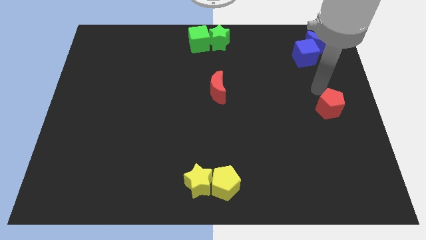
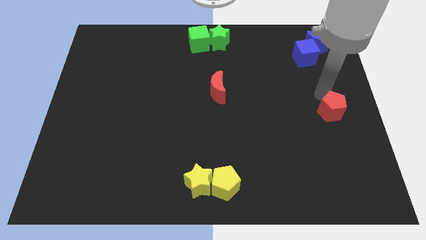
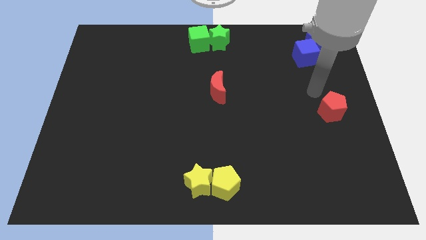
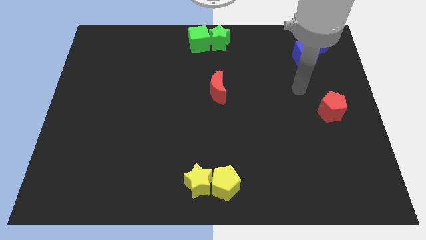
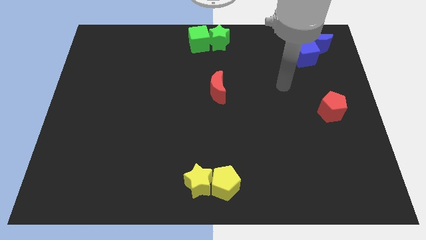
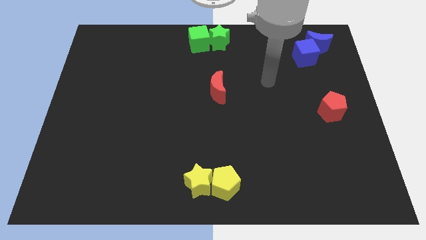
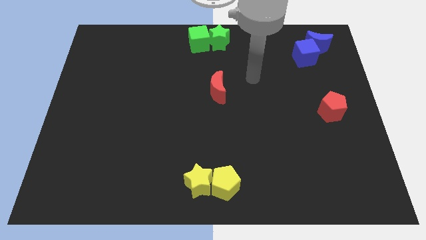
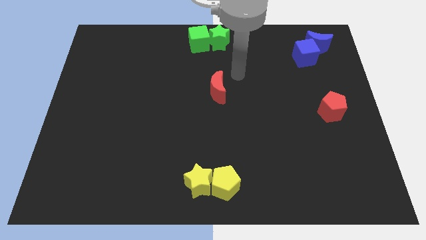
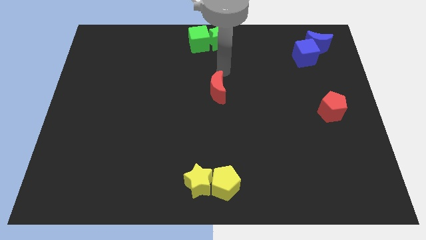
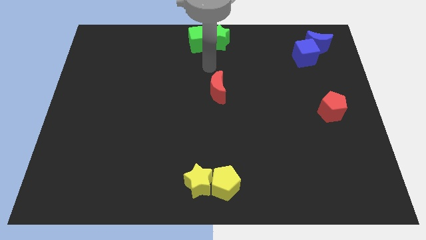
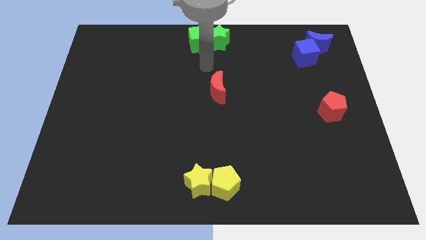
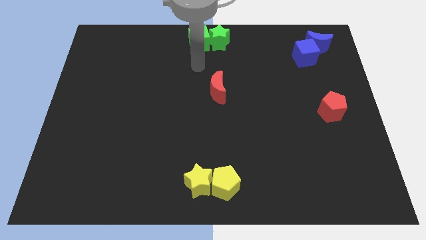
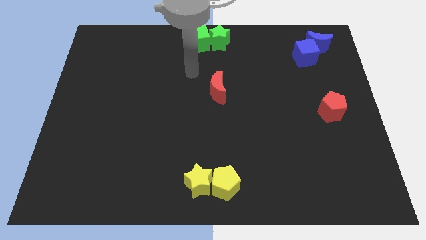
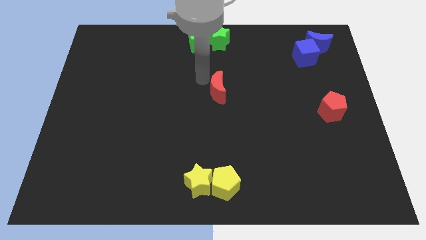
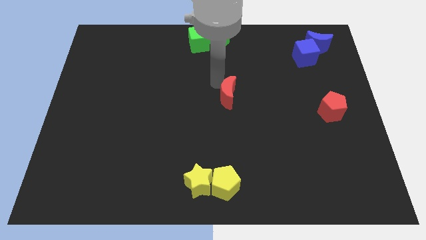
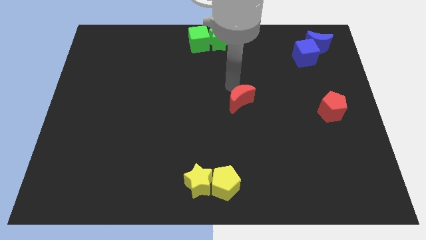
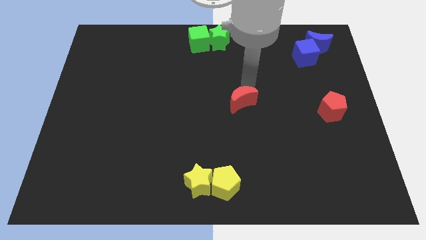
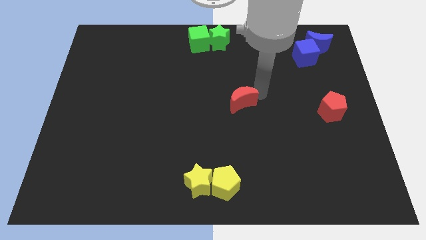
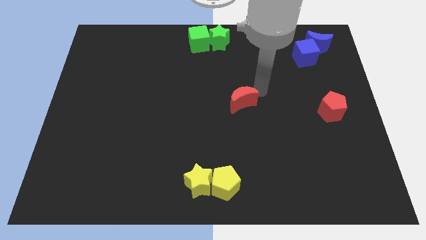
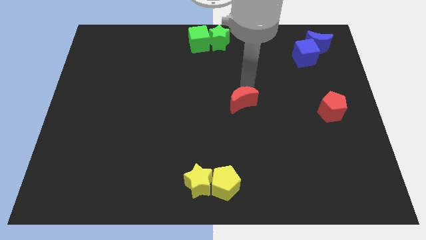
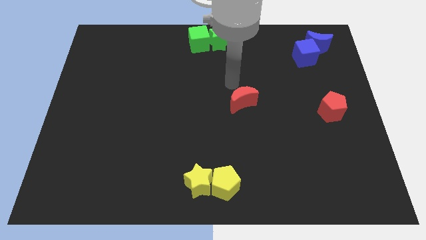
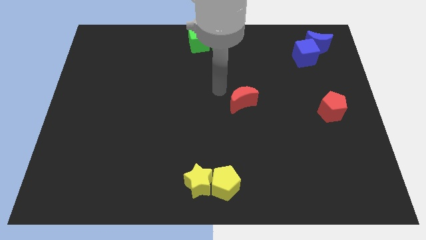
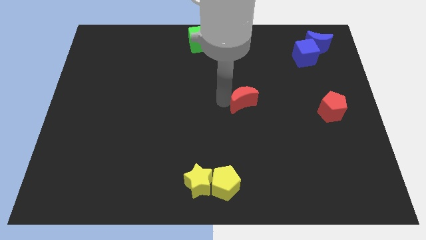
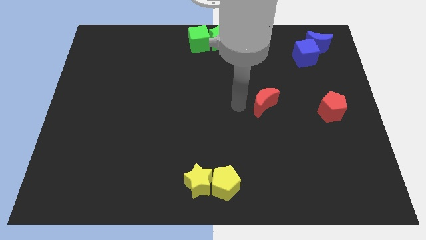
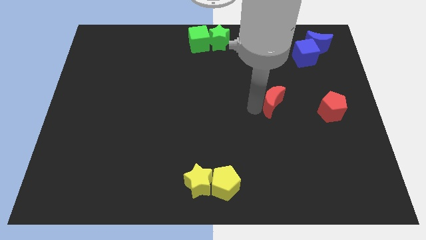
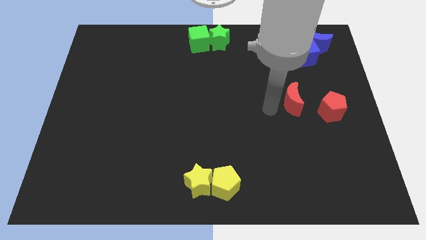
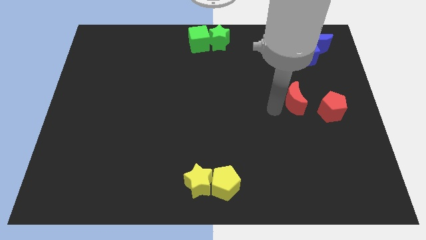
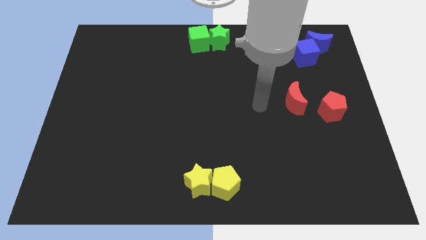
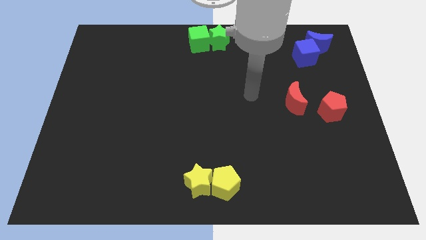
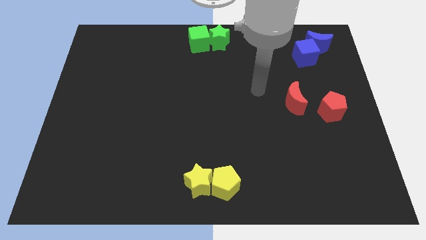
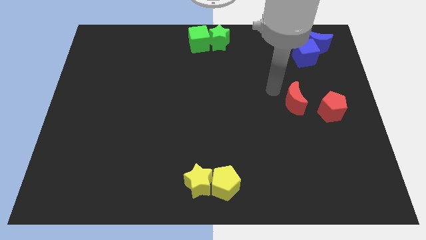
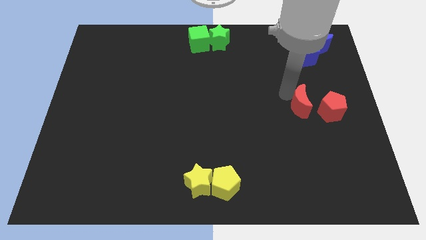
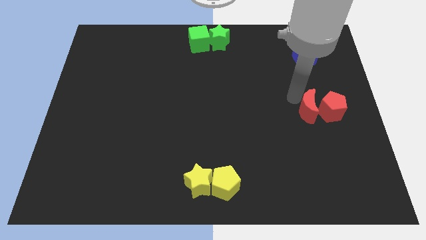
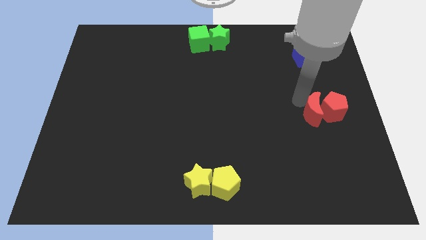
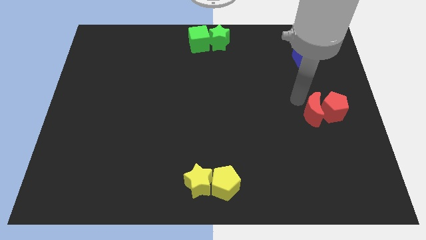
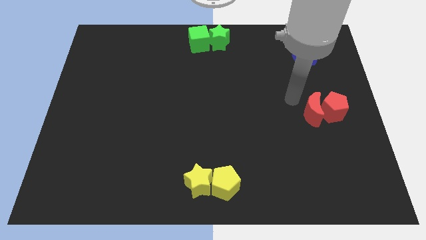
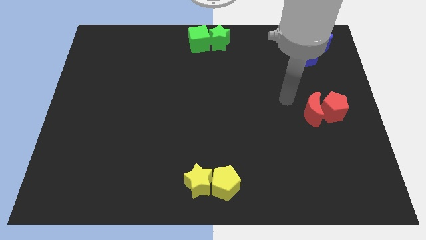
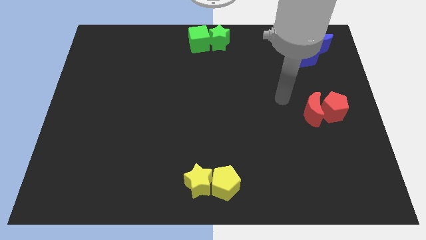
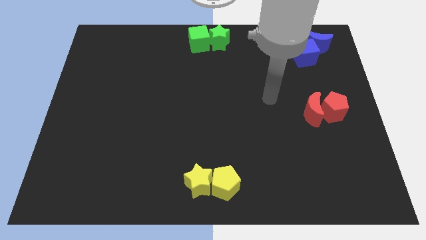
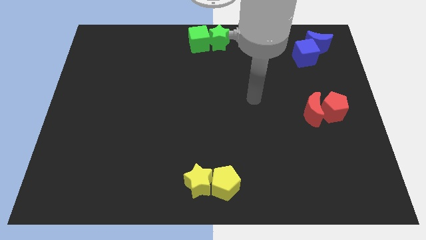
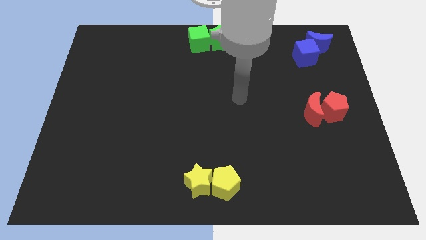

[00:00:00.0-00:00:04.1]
push the red crescent into the red pentagon

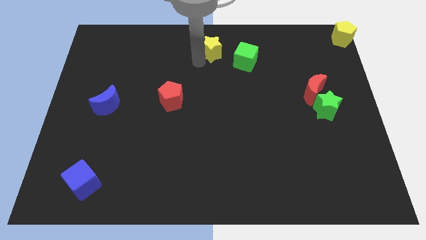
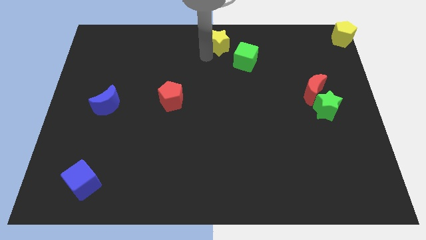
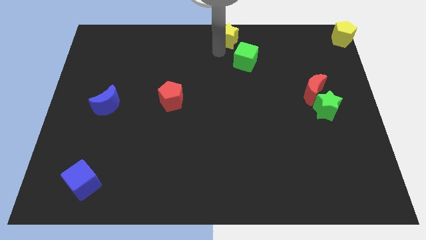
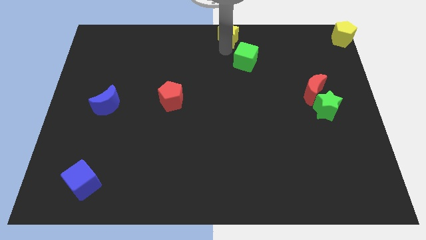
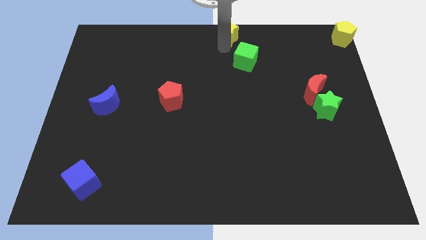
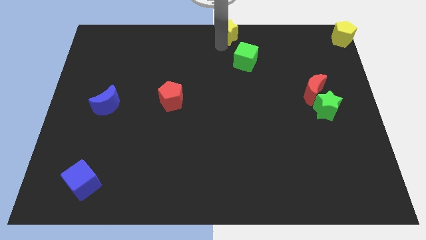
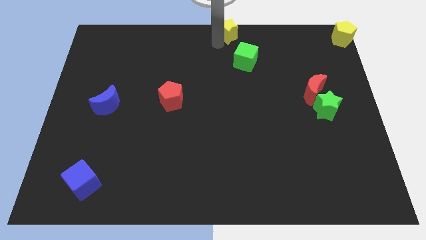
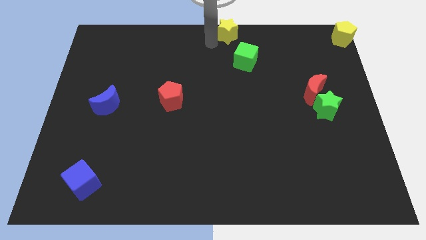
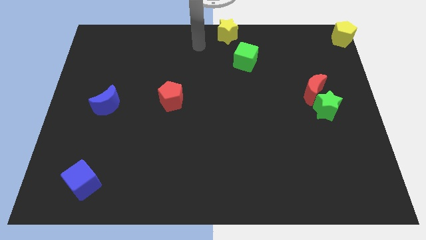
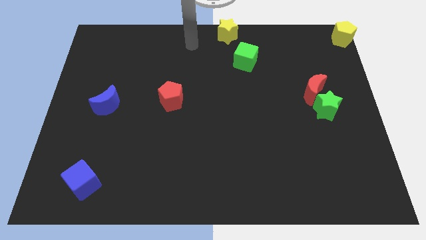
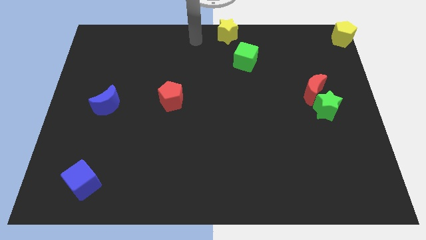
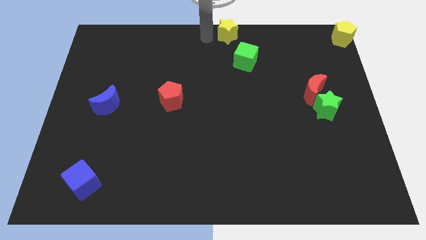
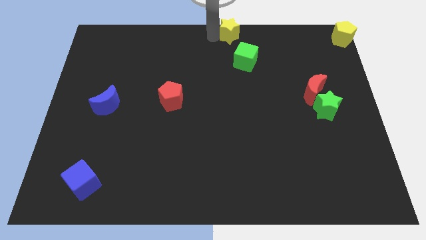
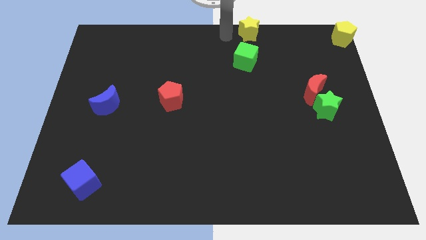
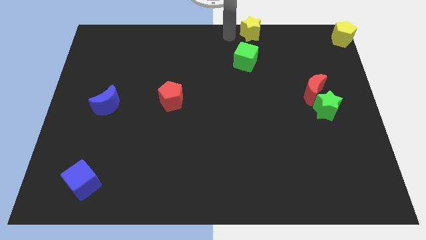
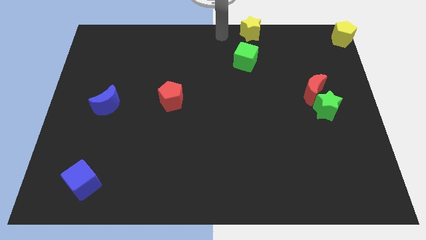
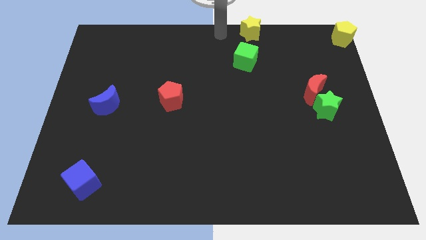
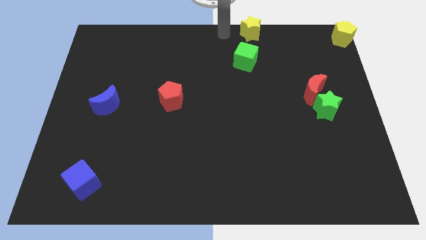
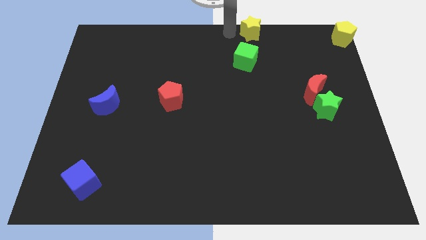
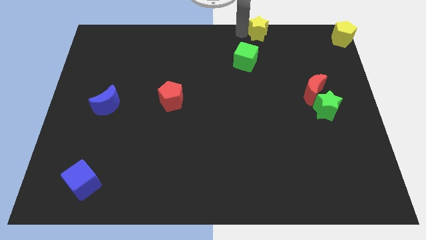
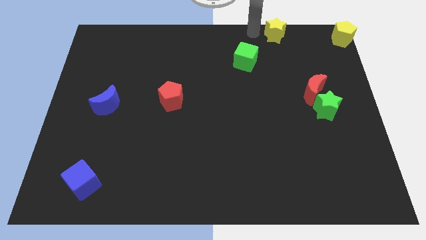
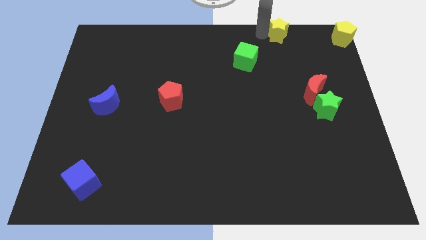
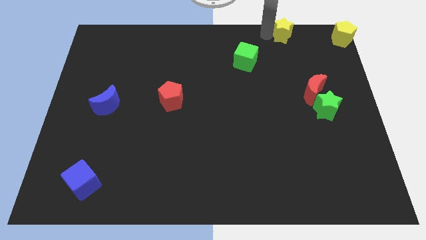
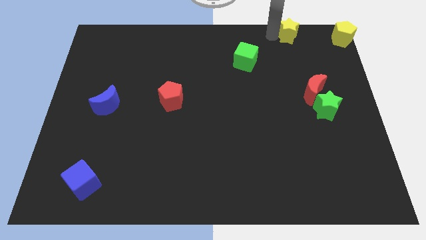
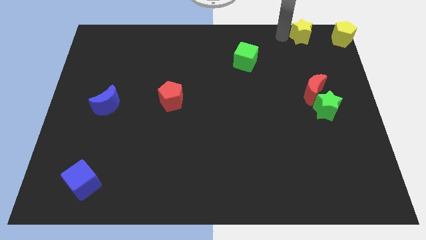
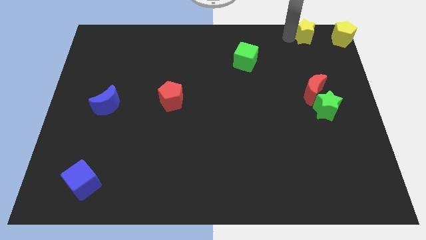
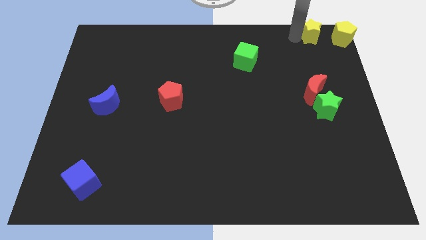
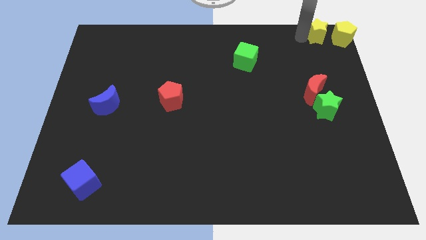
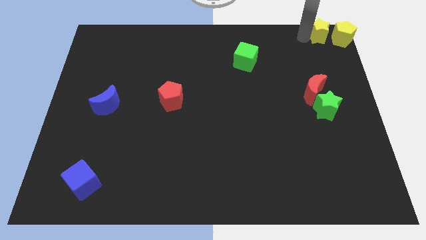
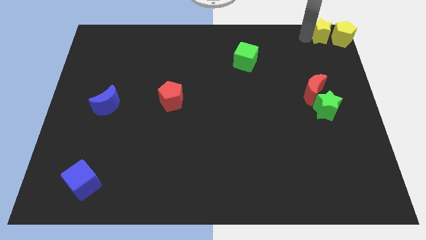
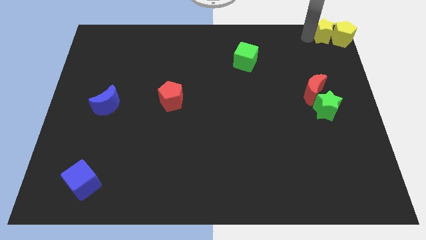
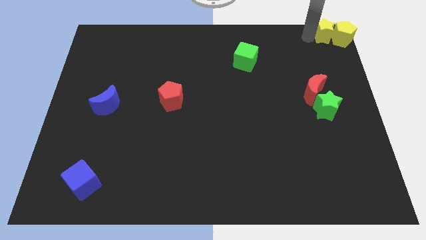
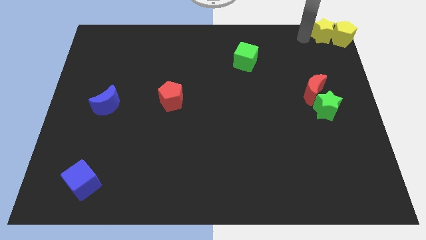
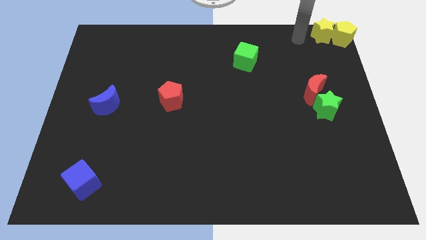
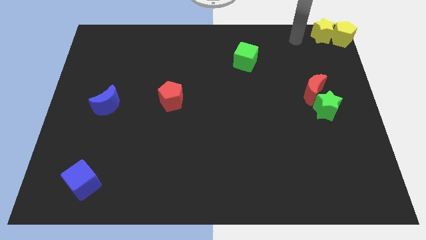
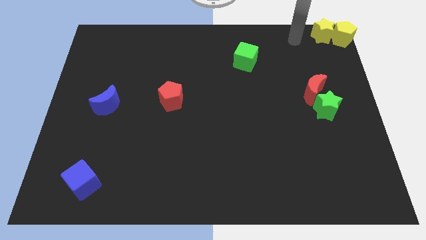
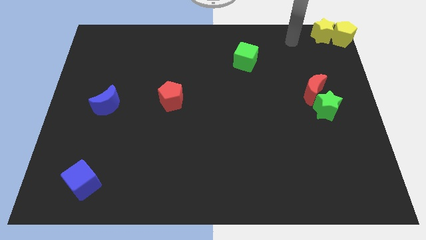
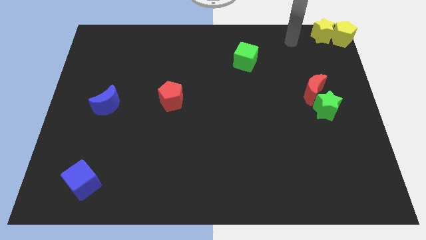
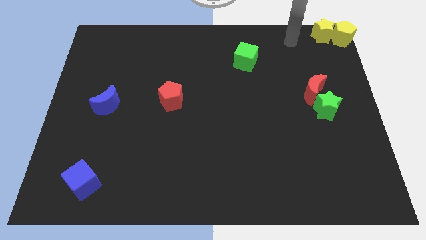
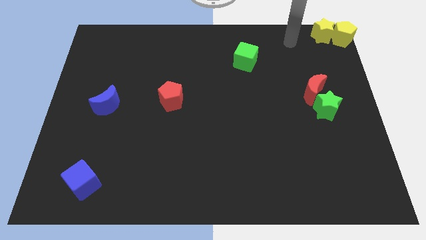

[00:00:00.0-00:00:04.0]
place the yellow star left to the yellow pentagon

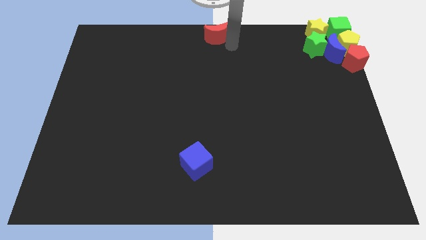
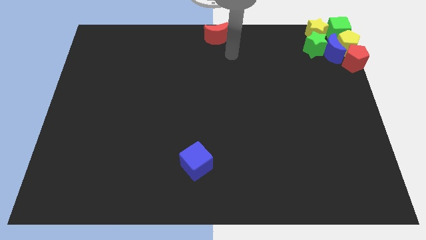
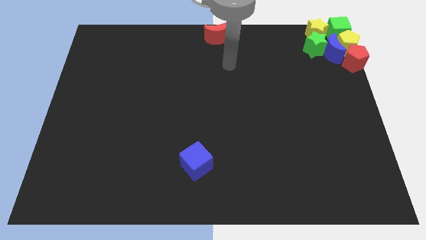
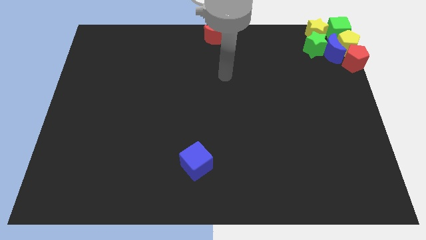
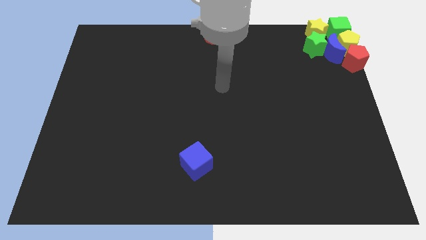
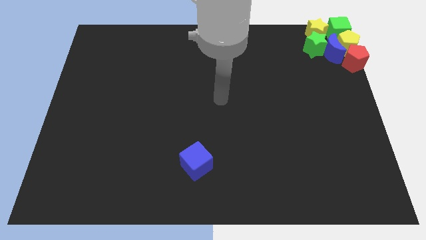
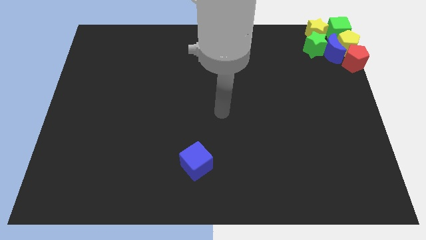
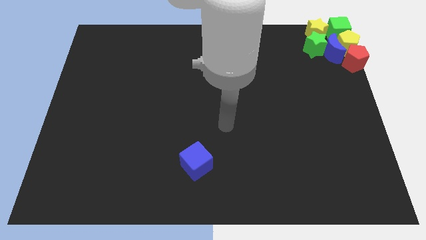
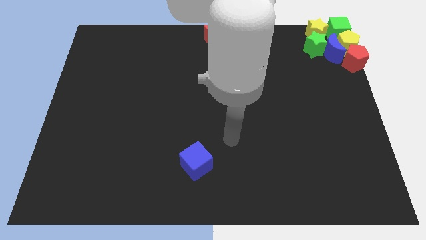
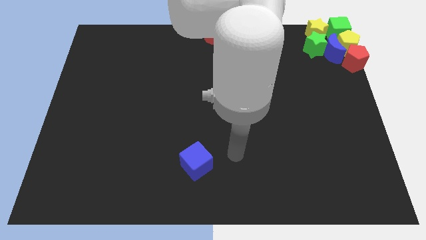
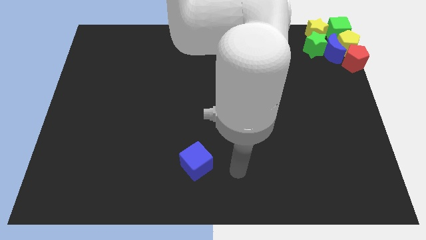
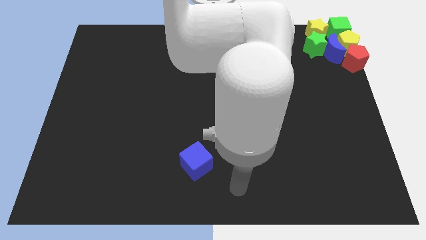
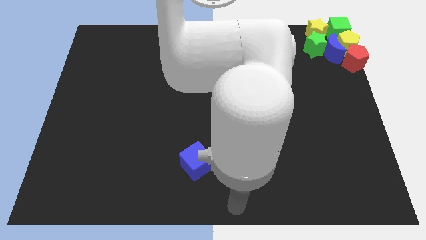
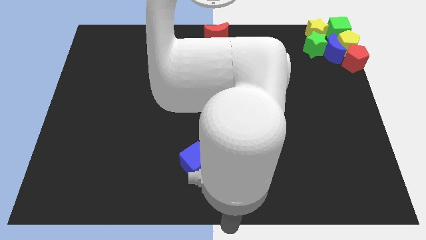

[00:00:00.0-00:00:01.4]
move away from the red crecent
